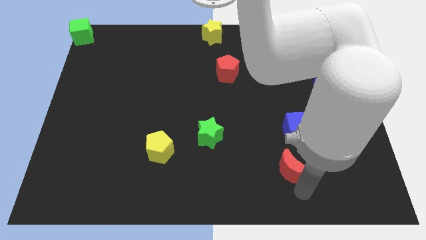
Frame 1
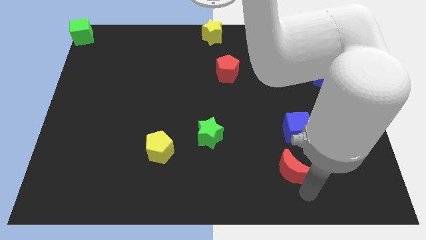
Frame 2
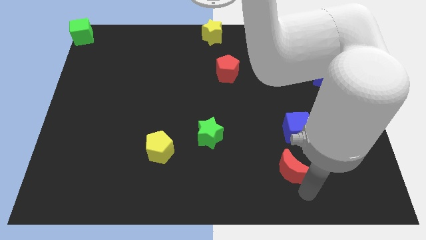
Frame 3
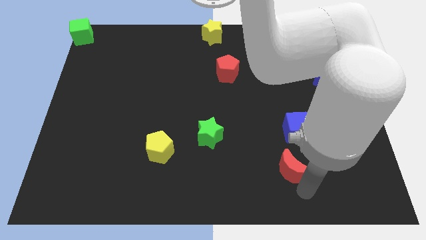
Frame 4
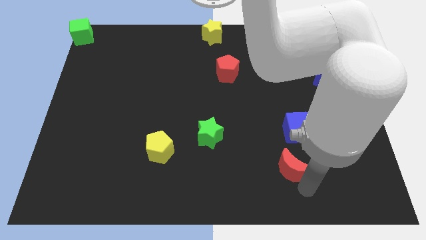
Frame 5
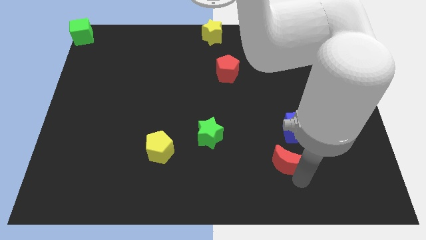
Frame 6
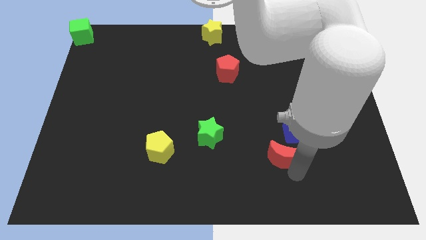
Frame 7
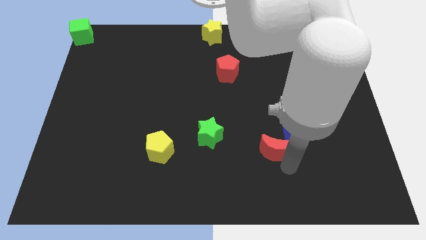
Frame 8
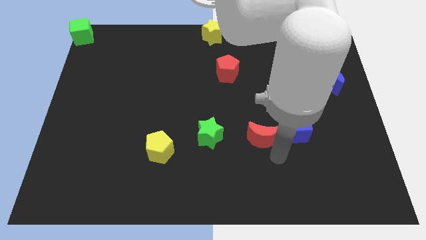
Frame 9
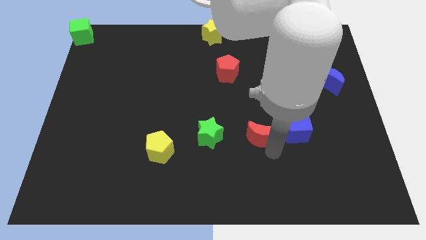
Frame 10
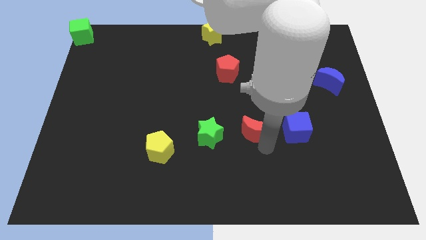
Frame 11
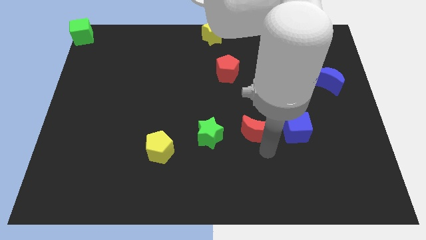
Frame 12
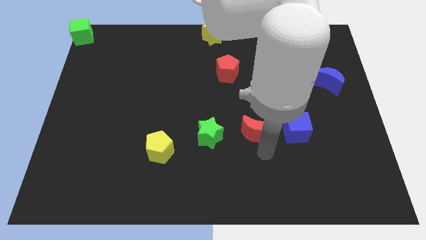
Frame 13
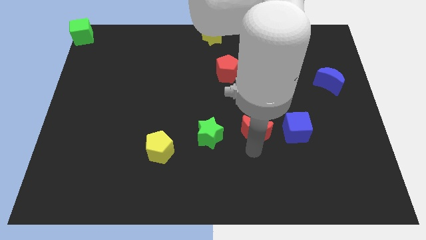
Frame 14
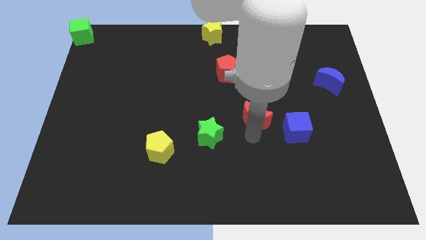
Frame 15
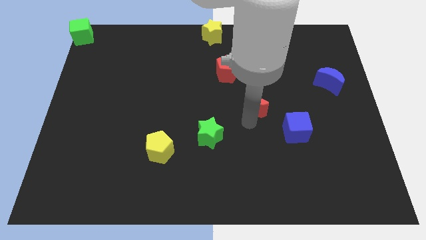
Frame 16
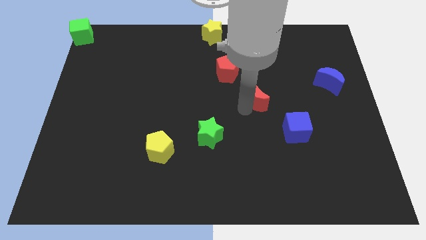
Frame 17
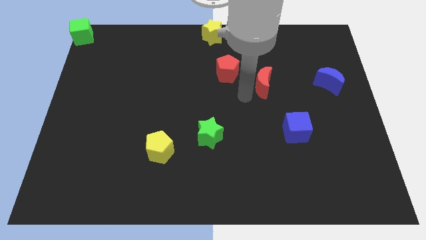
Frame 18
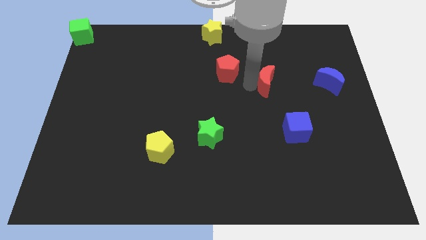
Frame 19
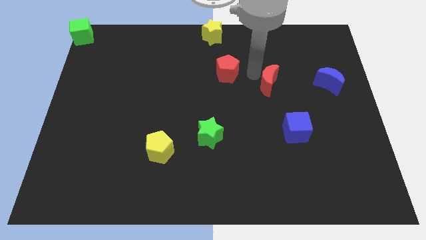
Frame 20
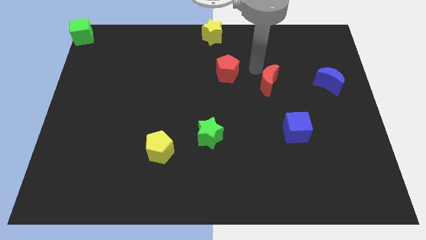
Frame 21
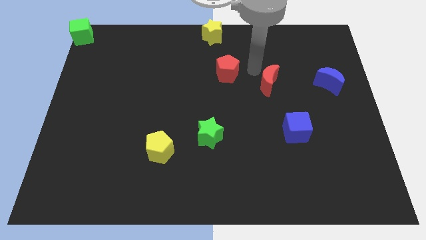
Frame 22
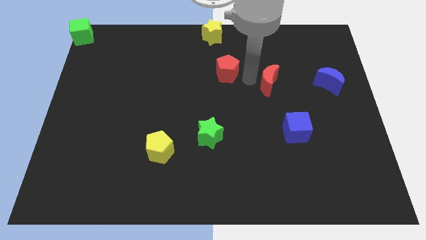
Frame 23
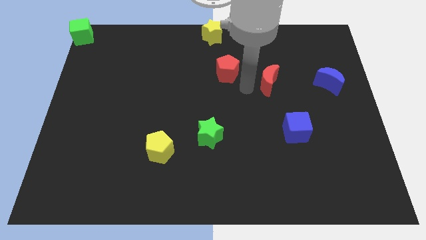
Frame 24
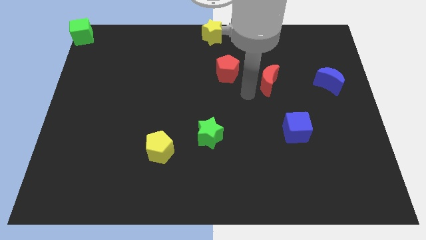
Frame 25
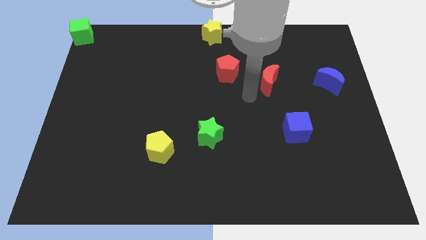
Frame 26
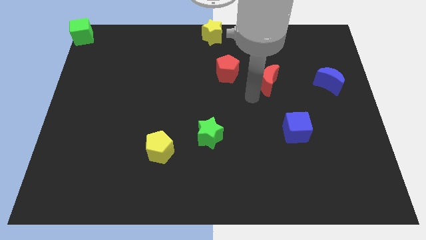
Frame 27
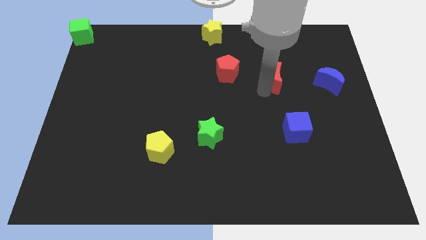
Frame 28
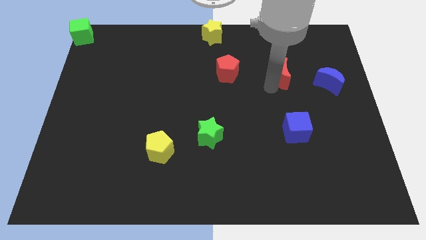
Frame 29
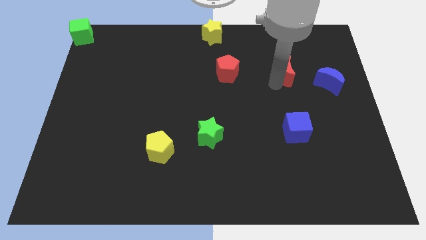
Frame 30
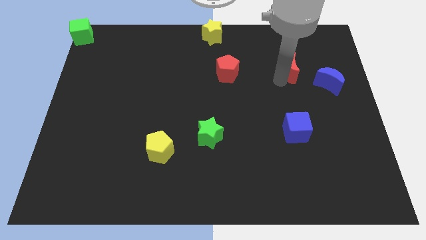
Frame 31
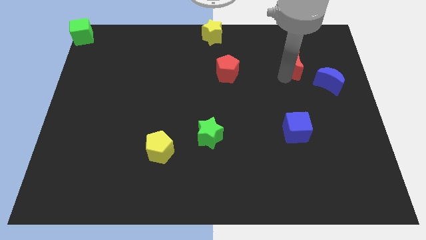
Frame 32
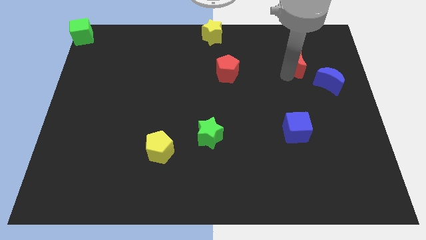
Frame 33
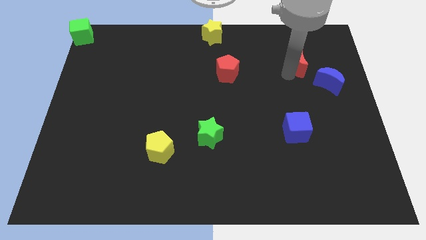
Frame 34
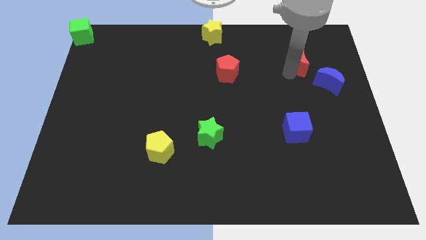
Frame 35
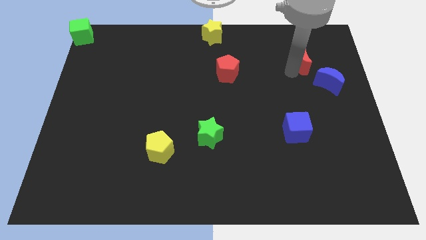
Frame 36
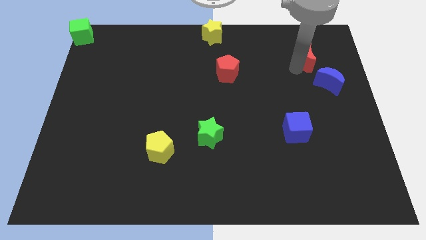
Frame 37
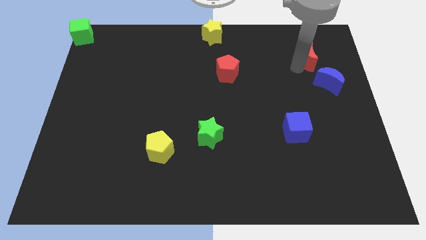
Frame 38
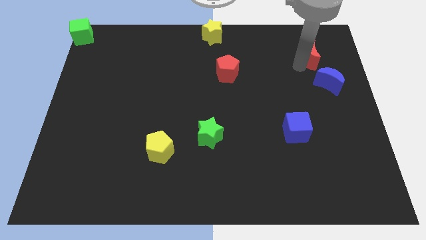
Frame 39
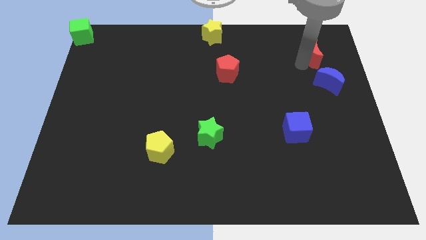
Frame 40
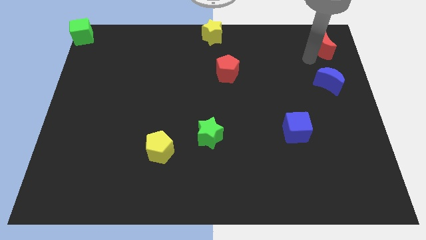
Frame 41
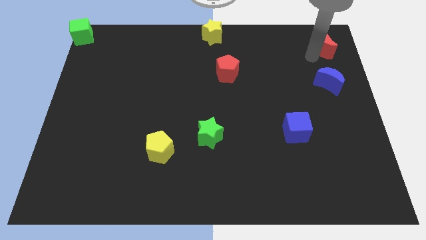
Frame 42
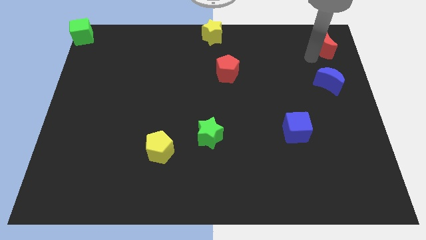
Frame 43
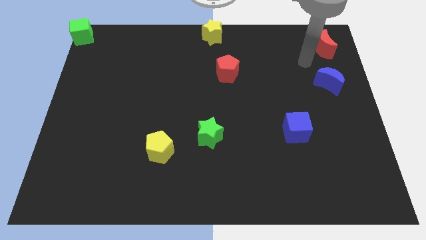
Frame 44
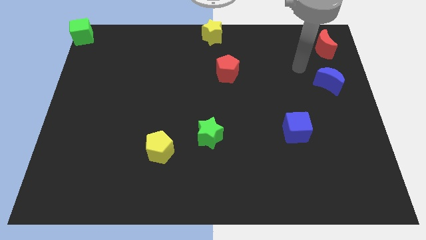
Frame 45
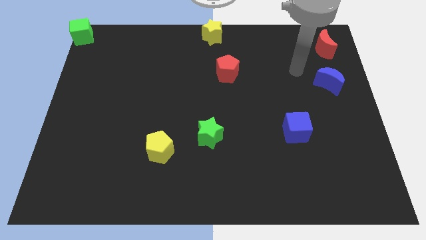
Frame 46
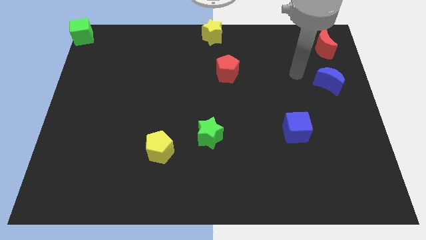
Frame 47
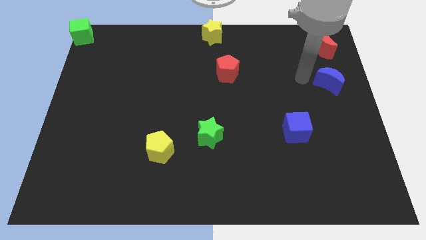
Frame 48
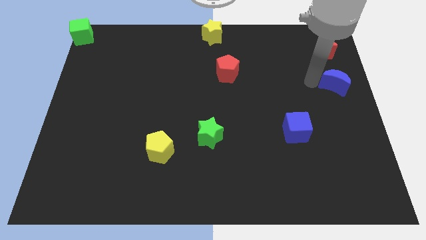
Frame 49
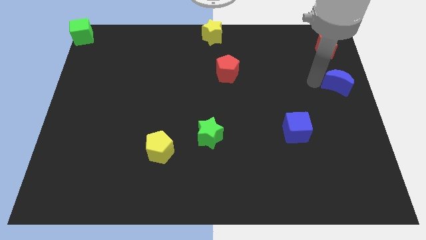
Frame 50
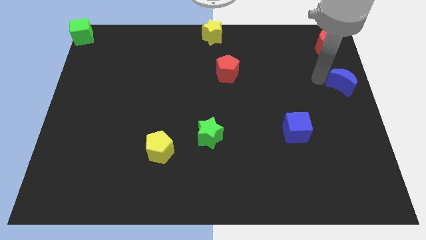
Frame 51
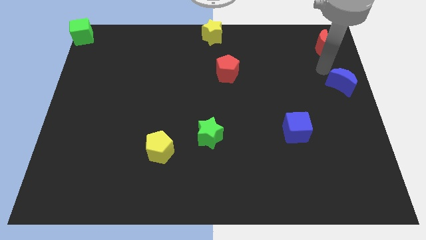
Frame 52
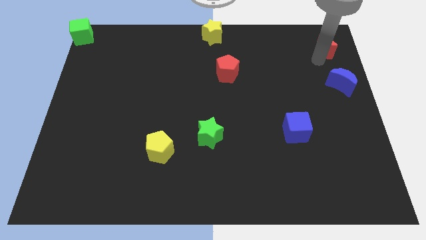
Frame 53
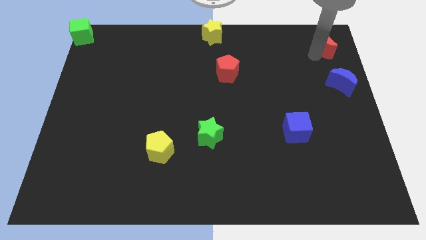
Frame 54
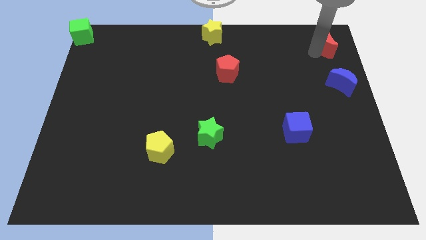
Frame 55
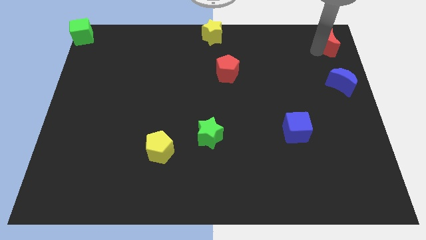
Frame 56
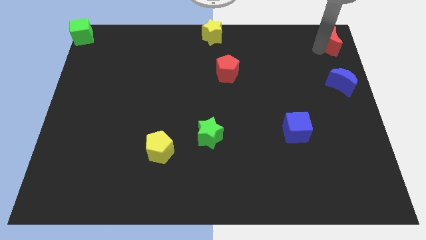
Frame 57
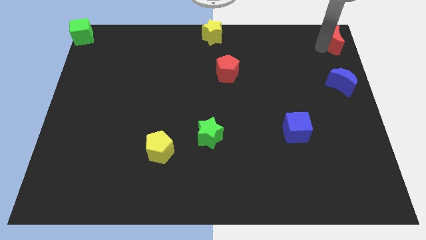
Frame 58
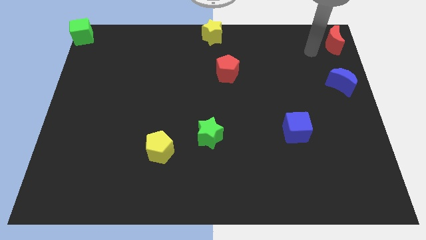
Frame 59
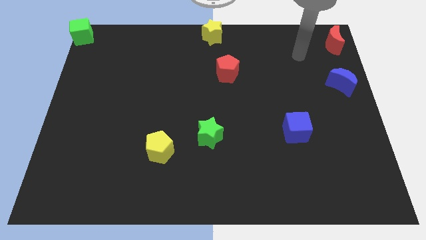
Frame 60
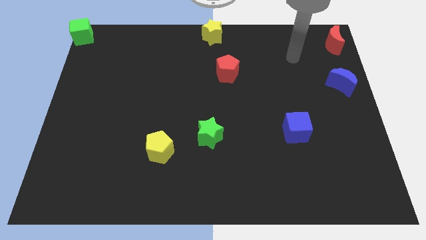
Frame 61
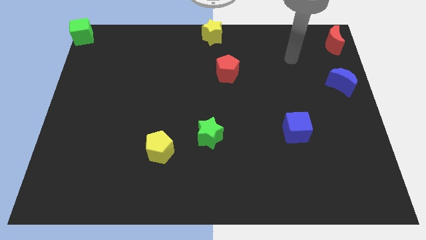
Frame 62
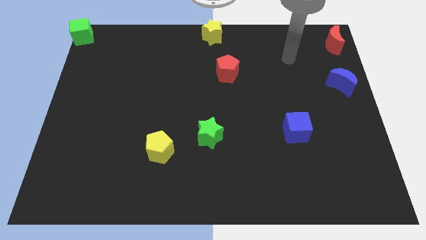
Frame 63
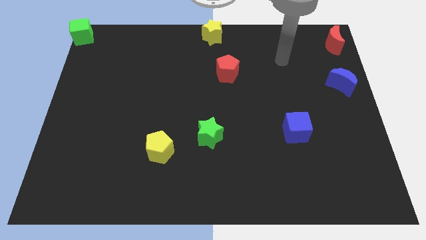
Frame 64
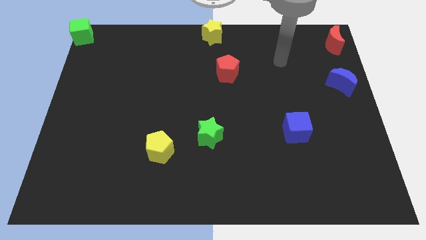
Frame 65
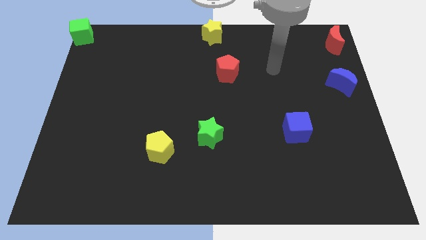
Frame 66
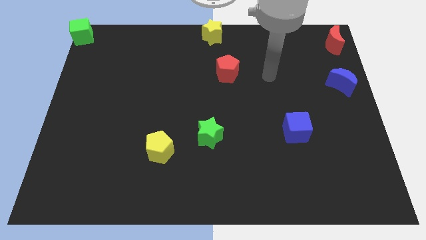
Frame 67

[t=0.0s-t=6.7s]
place the red crescent to the top right corner of the board

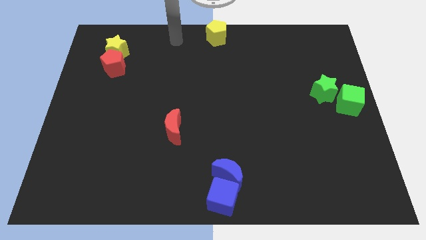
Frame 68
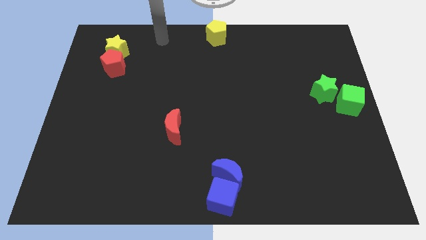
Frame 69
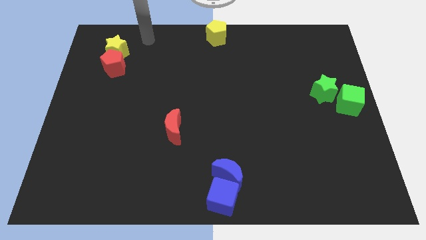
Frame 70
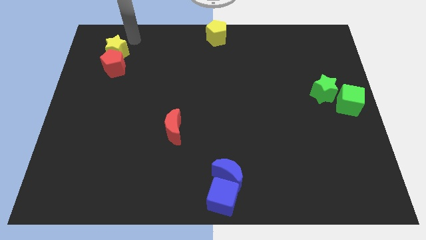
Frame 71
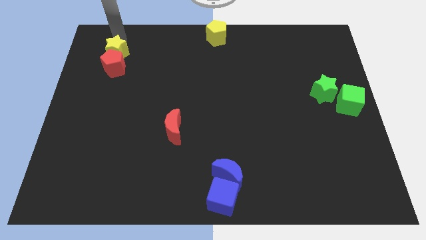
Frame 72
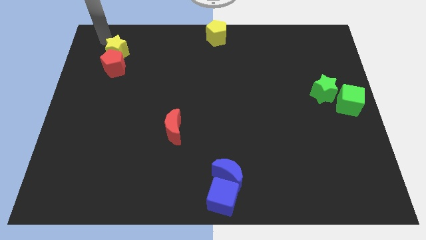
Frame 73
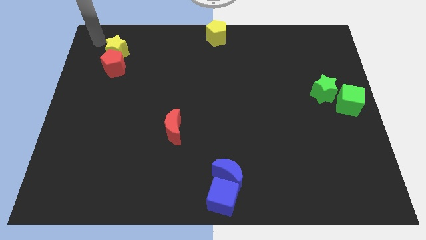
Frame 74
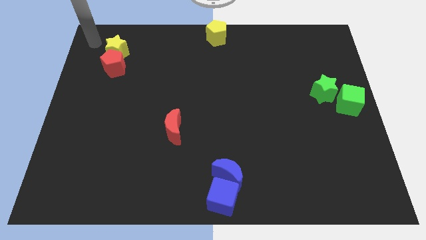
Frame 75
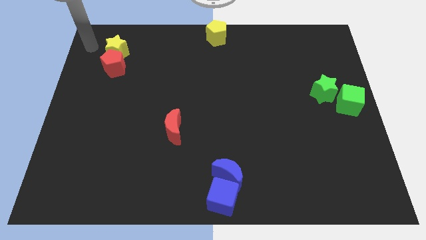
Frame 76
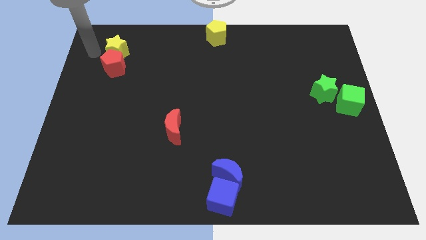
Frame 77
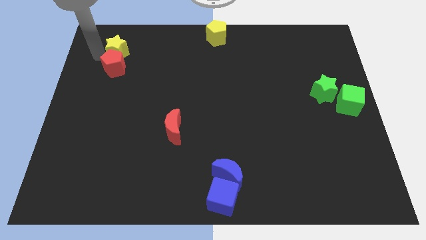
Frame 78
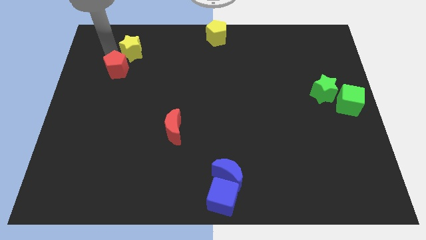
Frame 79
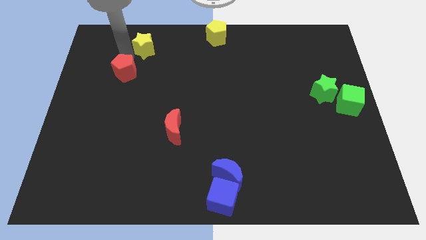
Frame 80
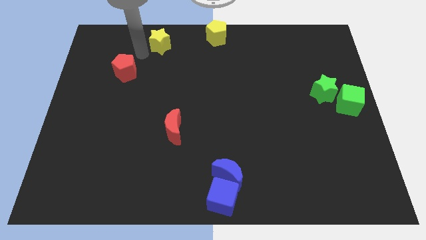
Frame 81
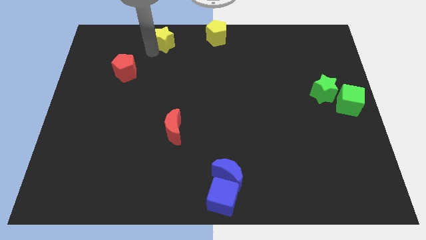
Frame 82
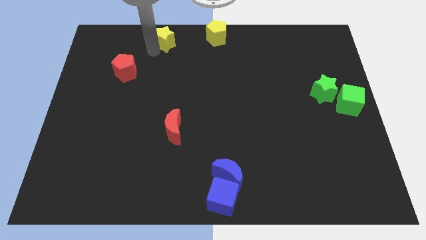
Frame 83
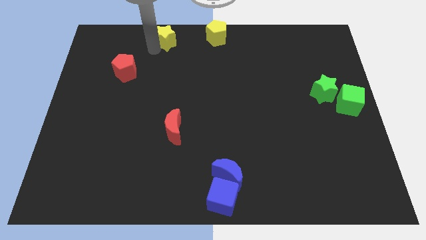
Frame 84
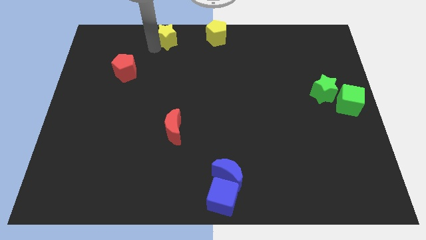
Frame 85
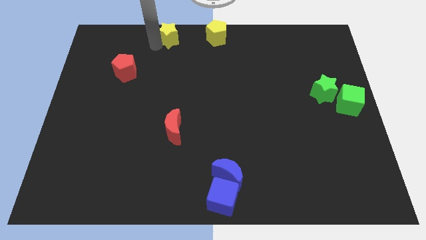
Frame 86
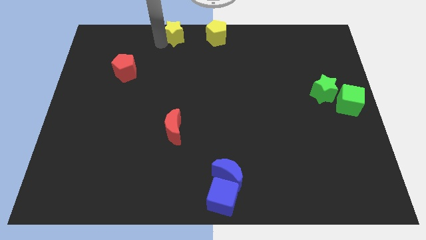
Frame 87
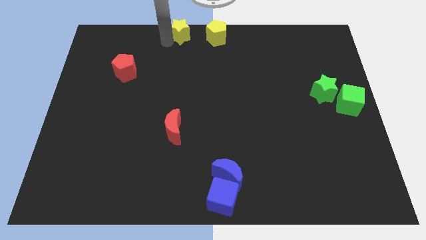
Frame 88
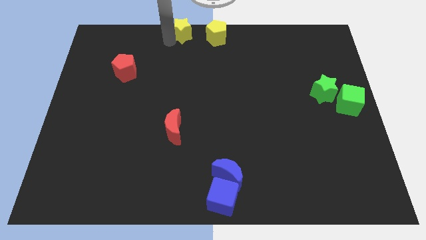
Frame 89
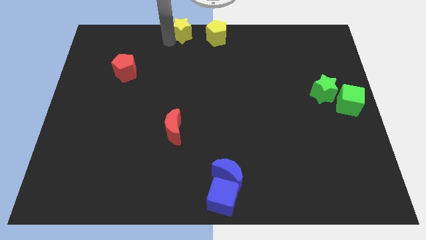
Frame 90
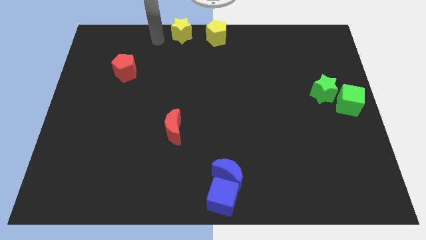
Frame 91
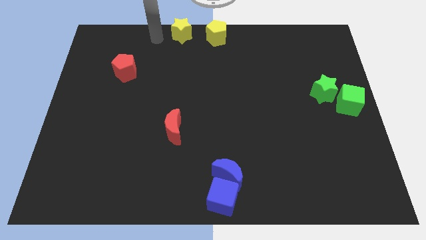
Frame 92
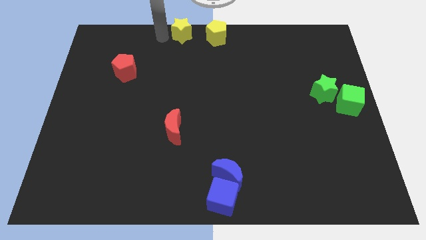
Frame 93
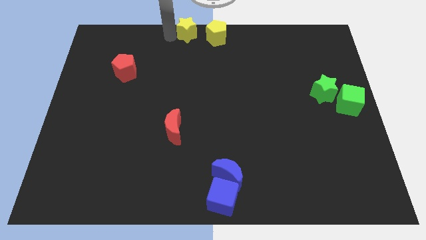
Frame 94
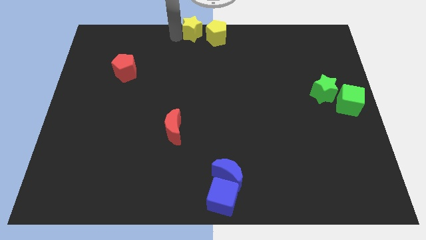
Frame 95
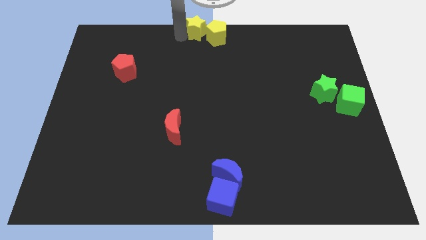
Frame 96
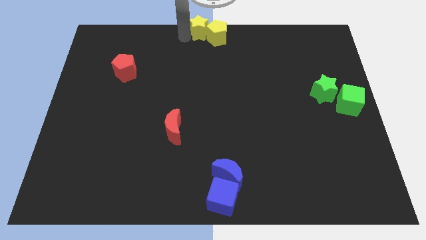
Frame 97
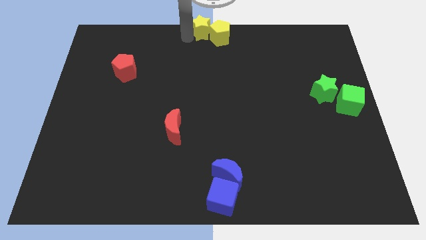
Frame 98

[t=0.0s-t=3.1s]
place the yellow star at the left of the yellow pentagon
